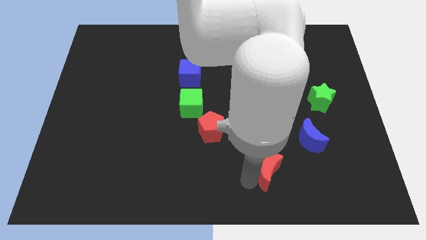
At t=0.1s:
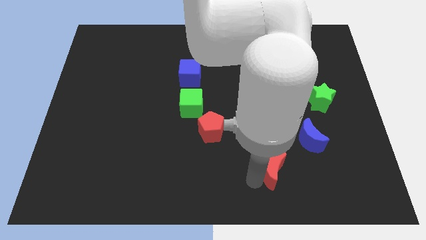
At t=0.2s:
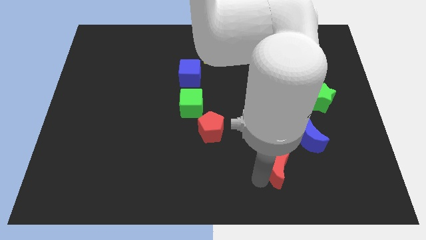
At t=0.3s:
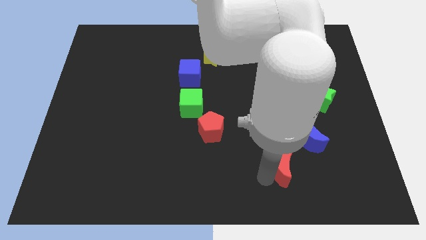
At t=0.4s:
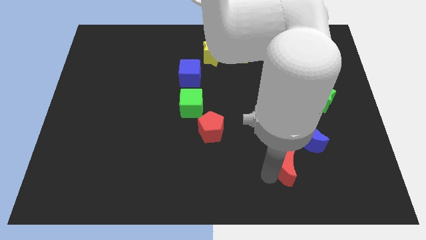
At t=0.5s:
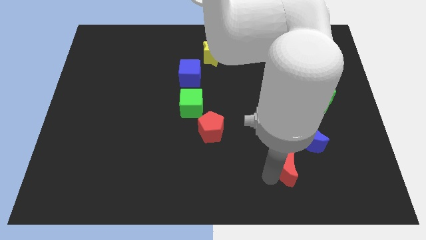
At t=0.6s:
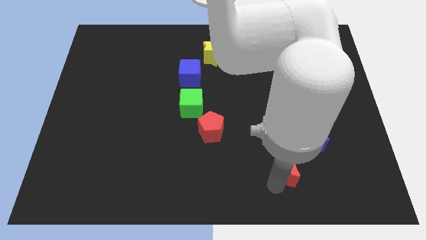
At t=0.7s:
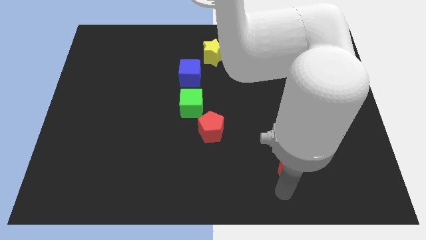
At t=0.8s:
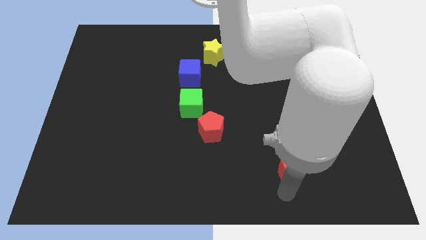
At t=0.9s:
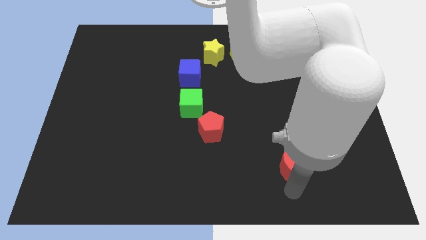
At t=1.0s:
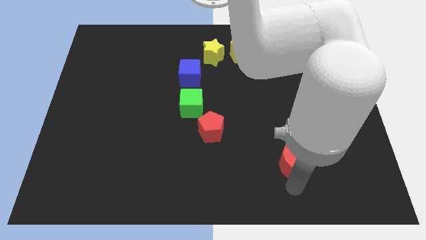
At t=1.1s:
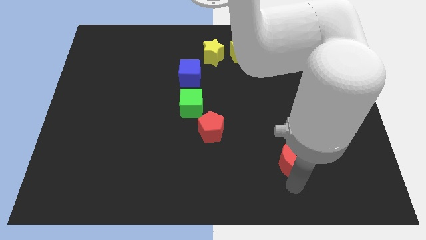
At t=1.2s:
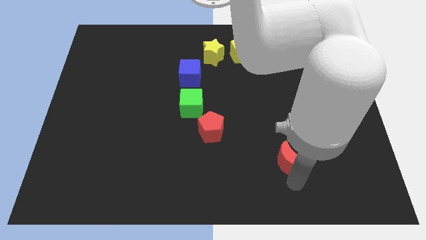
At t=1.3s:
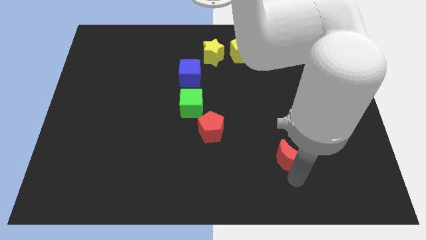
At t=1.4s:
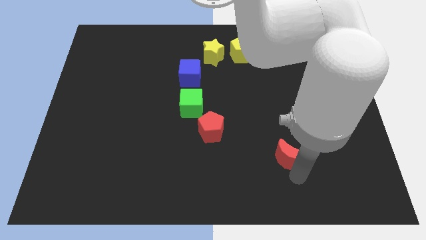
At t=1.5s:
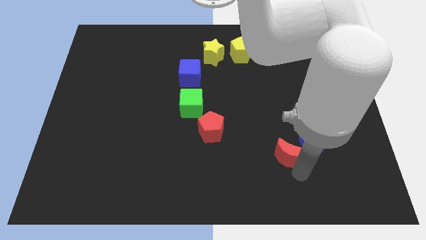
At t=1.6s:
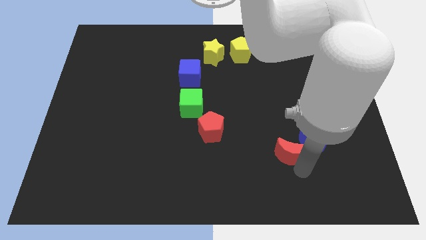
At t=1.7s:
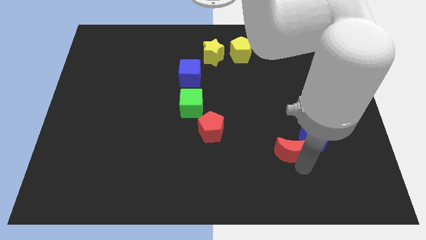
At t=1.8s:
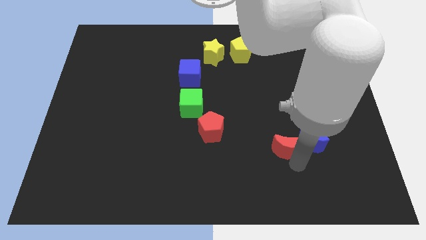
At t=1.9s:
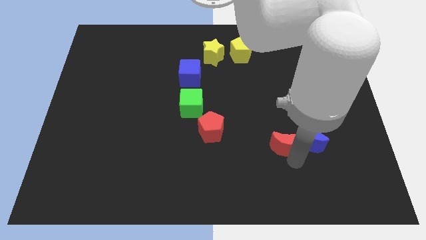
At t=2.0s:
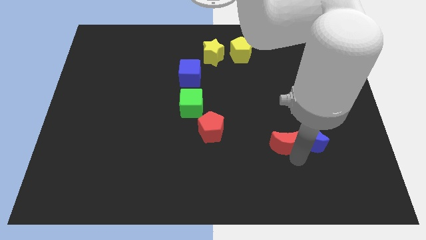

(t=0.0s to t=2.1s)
place red moon to the left of blue moon

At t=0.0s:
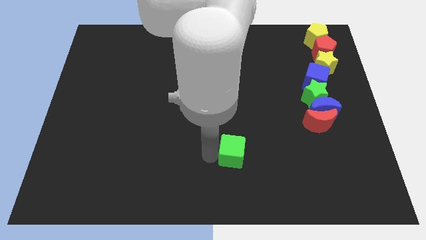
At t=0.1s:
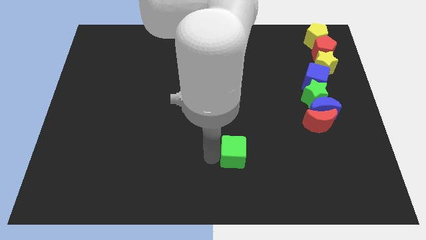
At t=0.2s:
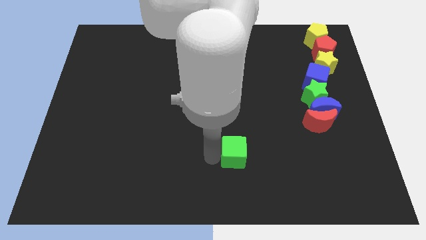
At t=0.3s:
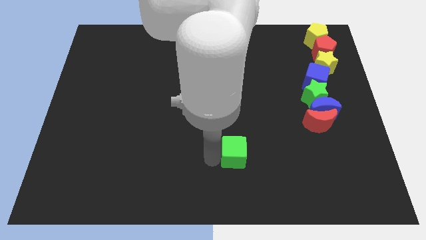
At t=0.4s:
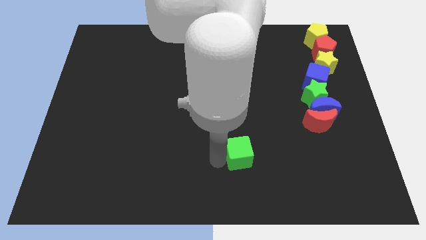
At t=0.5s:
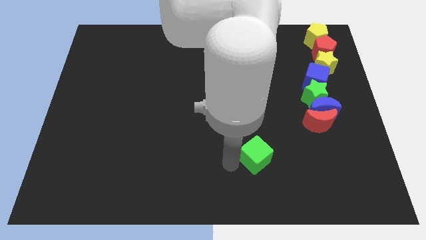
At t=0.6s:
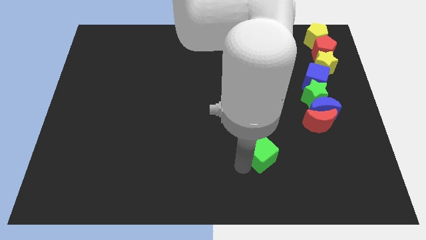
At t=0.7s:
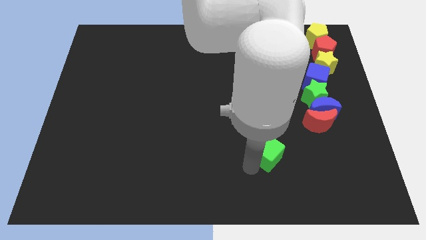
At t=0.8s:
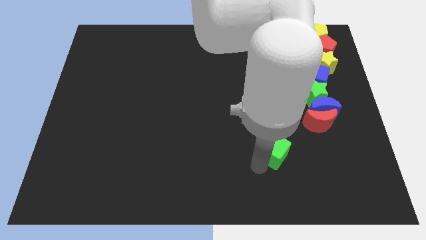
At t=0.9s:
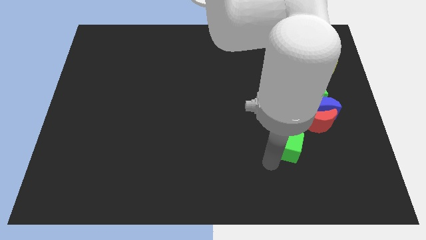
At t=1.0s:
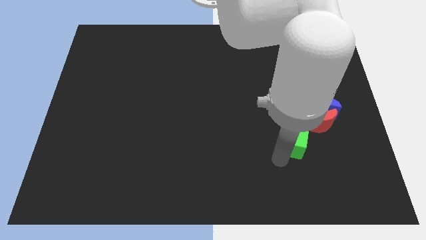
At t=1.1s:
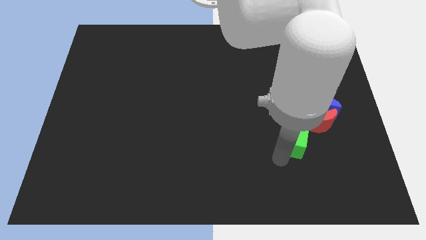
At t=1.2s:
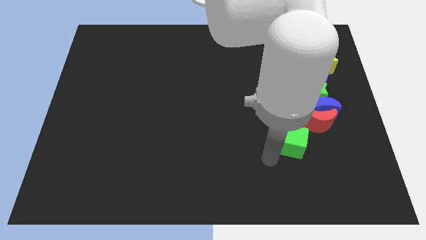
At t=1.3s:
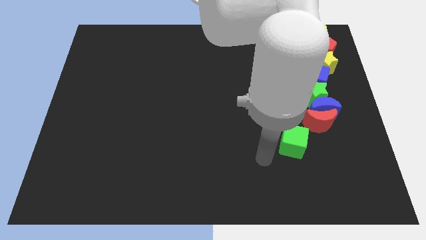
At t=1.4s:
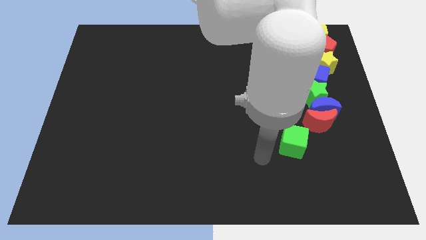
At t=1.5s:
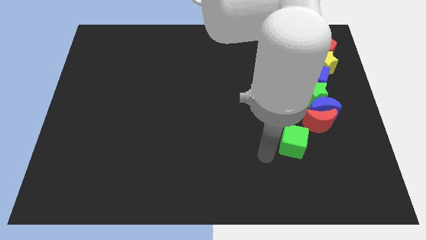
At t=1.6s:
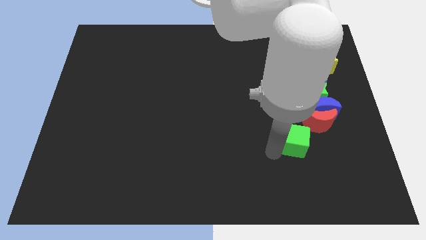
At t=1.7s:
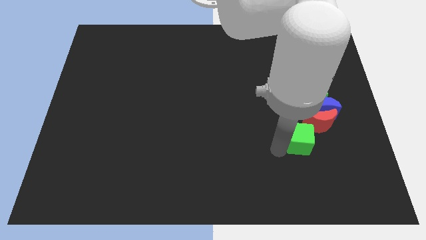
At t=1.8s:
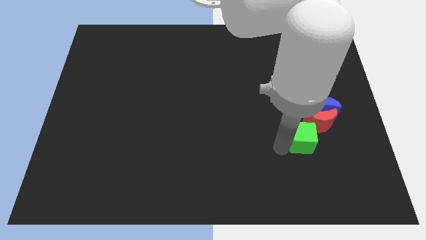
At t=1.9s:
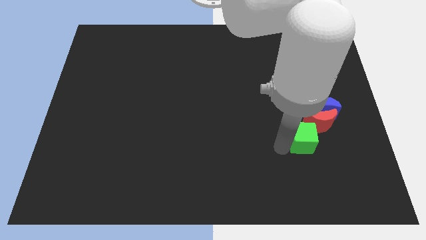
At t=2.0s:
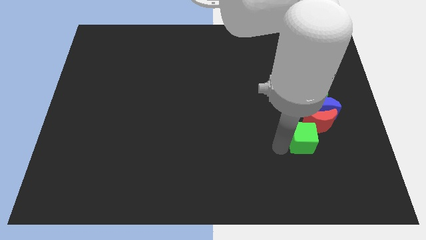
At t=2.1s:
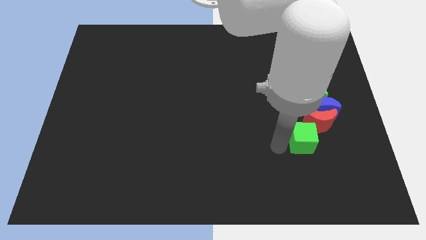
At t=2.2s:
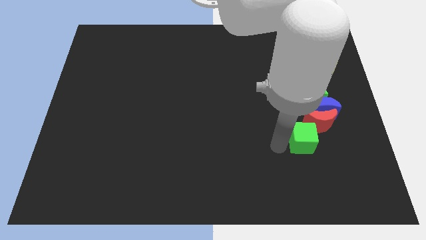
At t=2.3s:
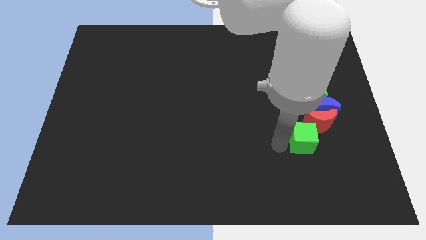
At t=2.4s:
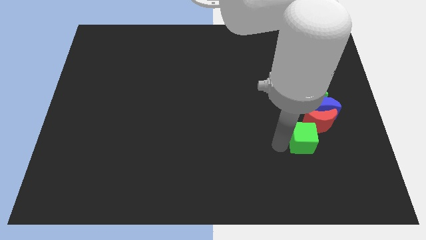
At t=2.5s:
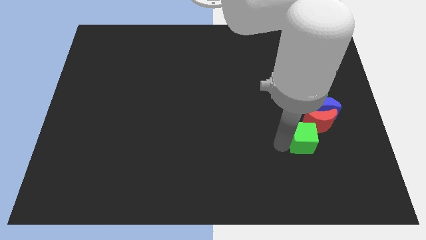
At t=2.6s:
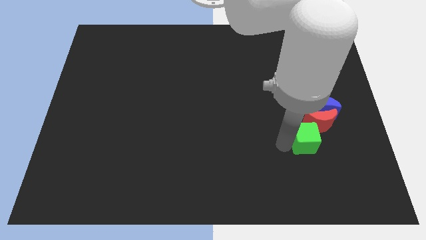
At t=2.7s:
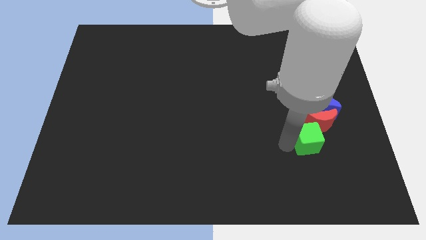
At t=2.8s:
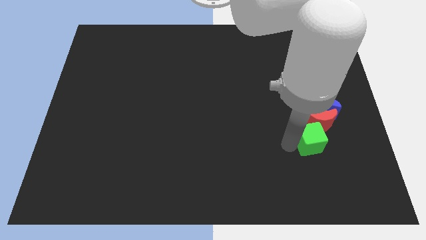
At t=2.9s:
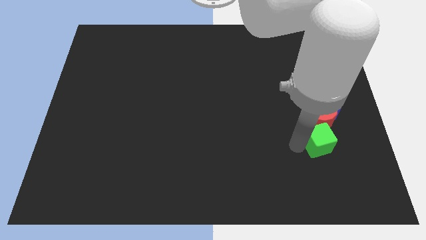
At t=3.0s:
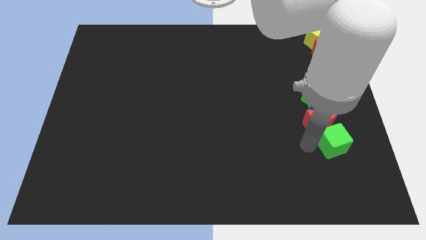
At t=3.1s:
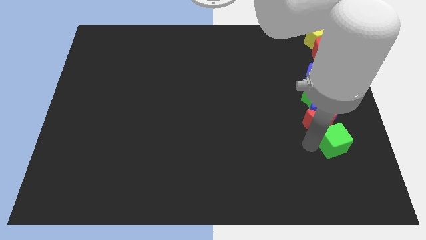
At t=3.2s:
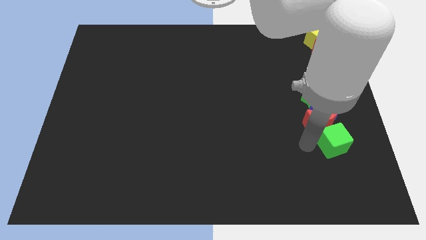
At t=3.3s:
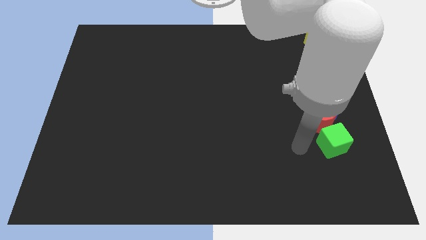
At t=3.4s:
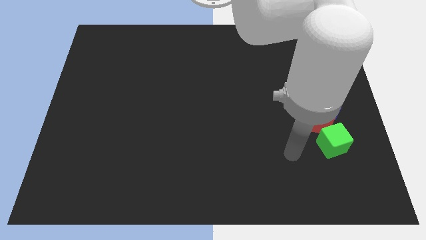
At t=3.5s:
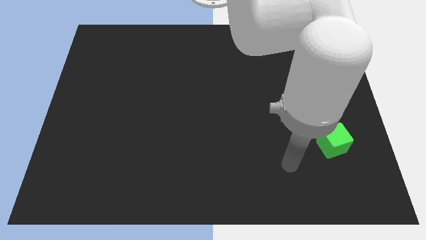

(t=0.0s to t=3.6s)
place the green cube below the red crescent

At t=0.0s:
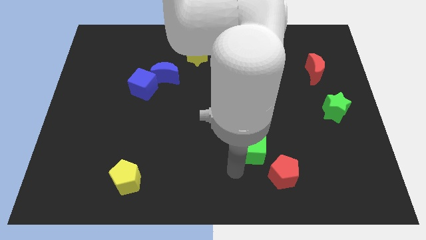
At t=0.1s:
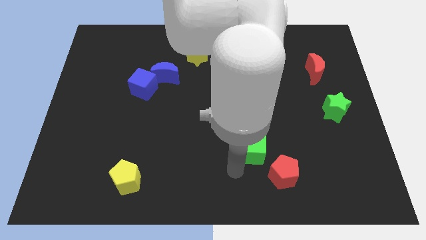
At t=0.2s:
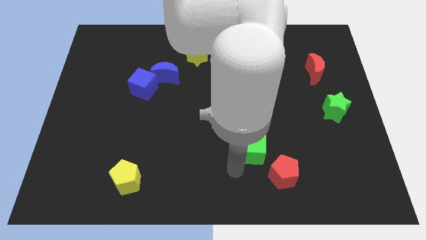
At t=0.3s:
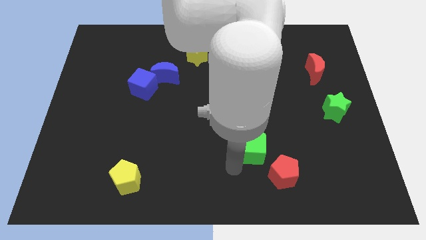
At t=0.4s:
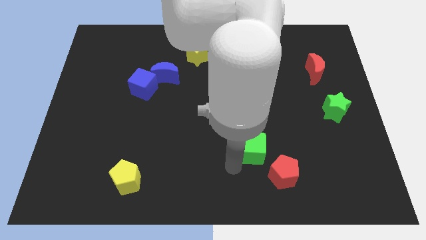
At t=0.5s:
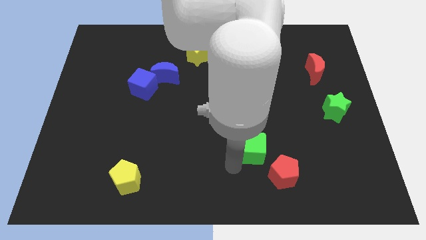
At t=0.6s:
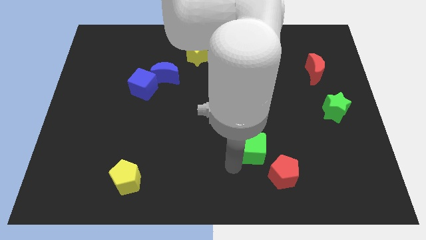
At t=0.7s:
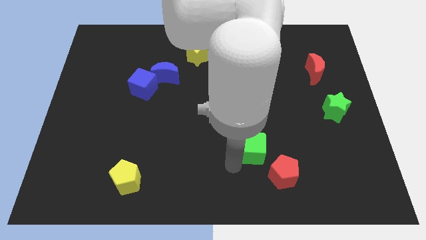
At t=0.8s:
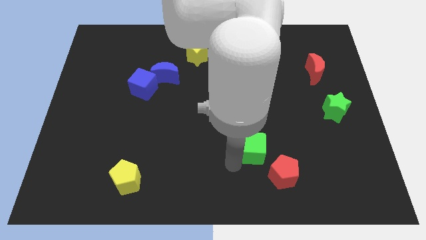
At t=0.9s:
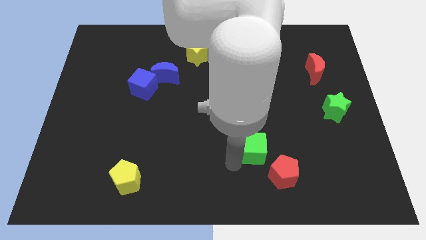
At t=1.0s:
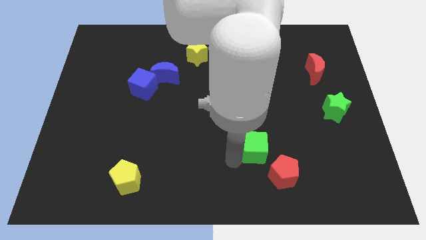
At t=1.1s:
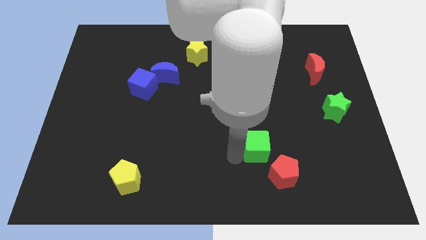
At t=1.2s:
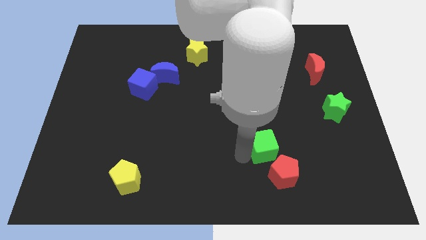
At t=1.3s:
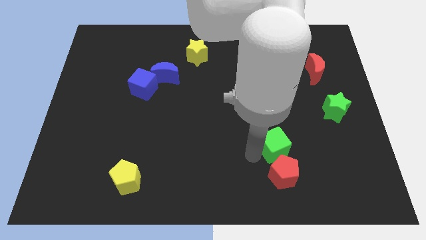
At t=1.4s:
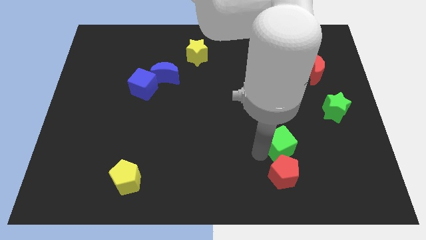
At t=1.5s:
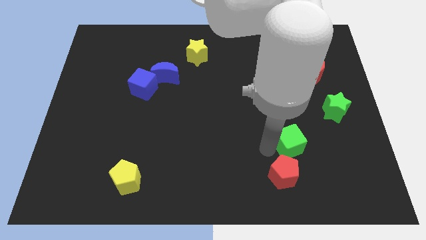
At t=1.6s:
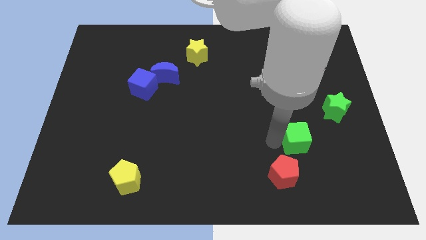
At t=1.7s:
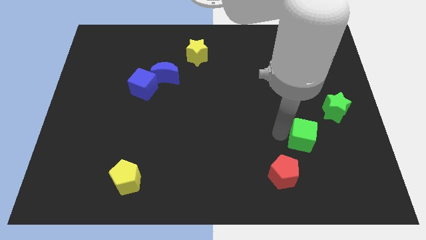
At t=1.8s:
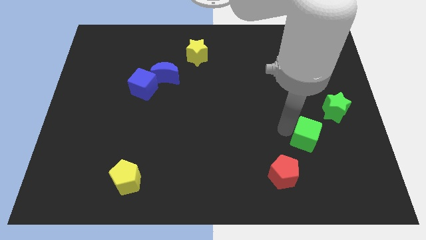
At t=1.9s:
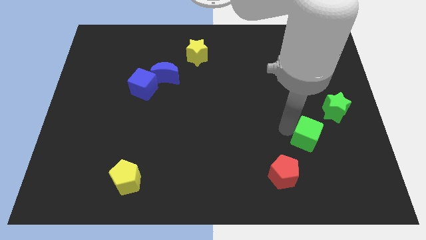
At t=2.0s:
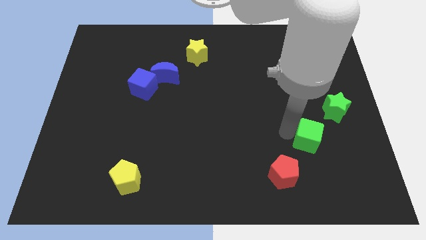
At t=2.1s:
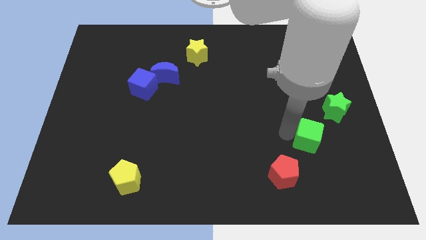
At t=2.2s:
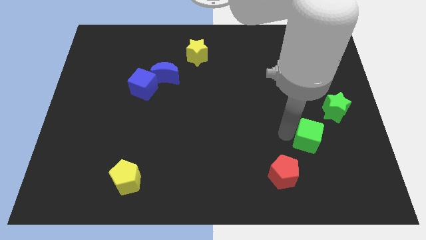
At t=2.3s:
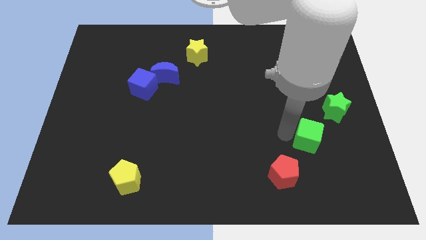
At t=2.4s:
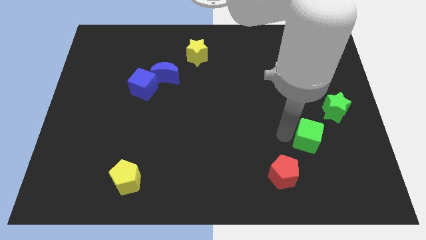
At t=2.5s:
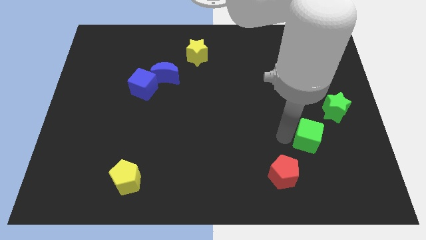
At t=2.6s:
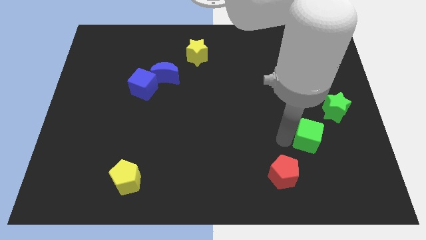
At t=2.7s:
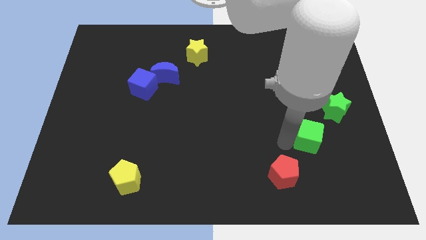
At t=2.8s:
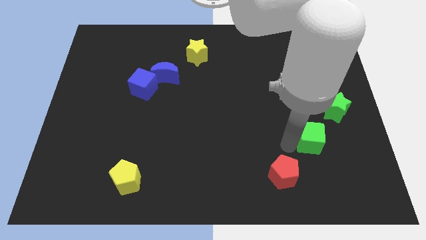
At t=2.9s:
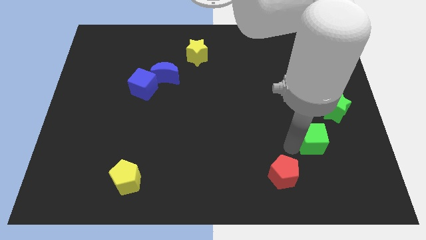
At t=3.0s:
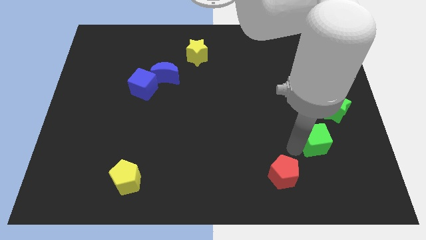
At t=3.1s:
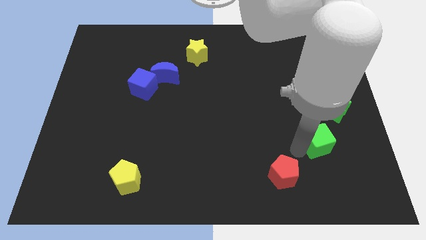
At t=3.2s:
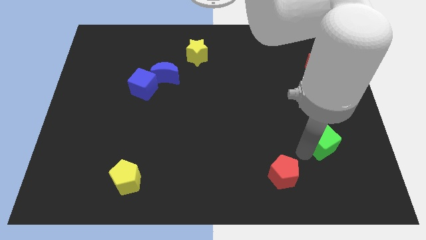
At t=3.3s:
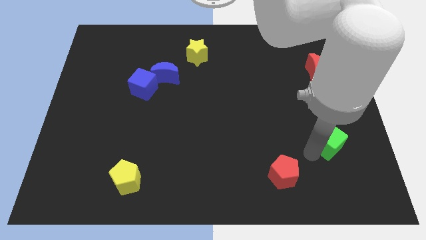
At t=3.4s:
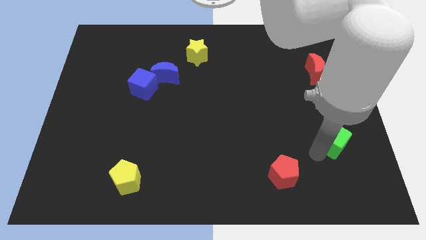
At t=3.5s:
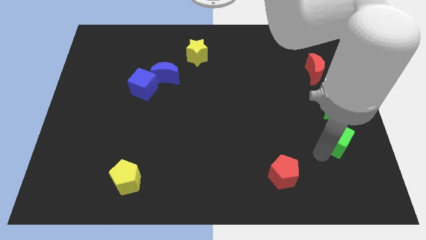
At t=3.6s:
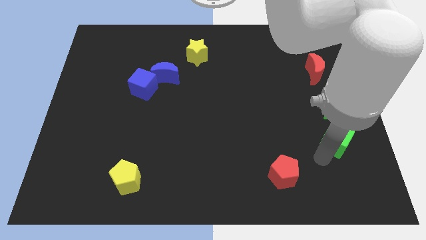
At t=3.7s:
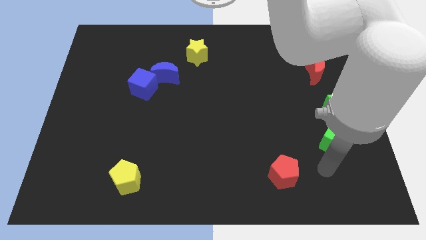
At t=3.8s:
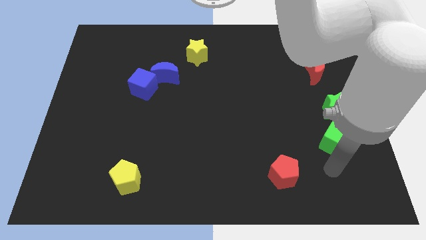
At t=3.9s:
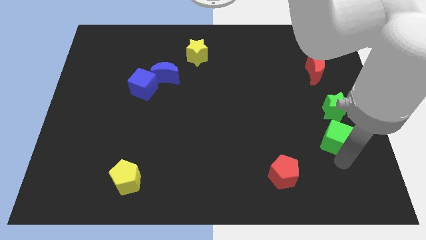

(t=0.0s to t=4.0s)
push the green cube towards the right side of the board
